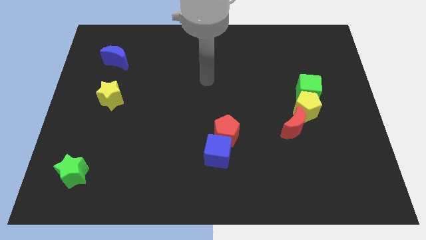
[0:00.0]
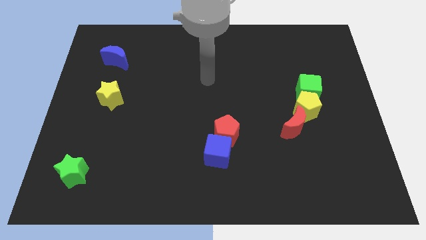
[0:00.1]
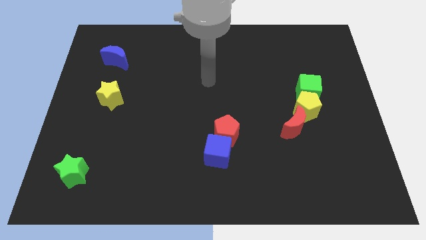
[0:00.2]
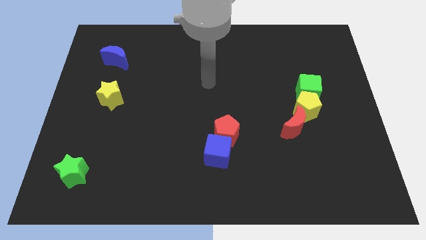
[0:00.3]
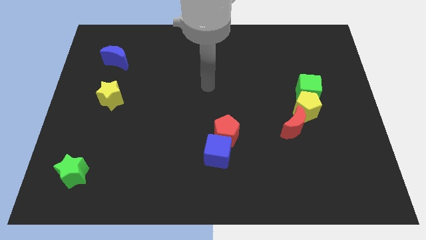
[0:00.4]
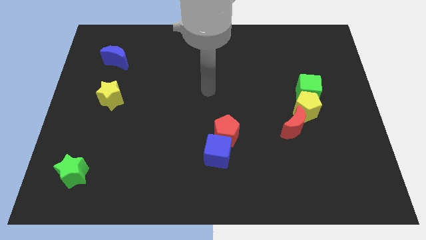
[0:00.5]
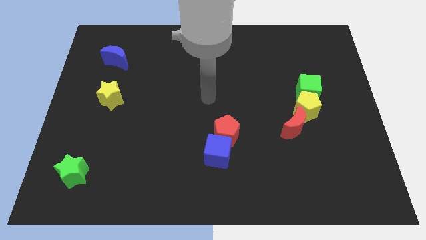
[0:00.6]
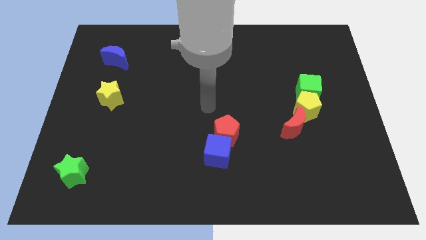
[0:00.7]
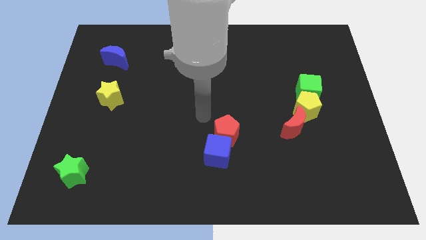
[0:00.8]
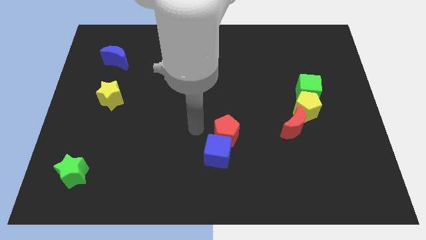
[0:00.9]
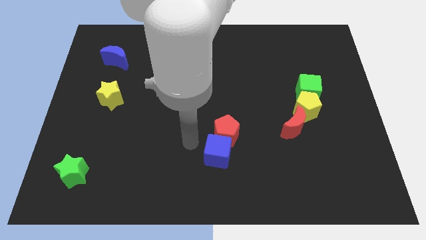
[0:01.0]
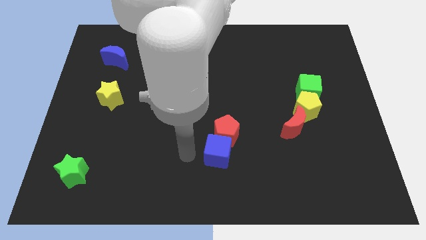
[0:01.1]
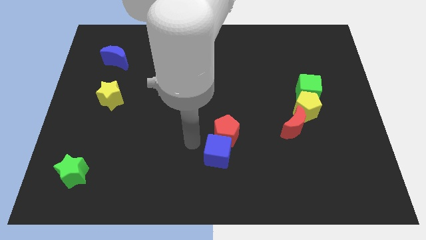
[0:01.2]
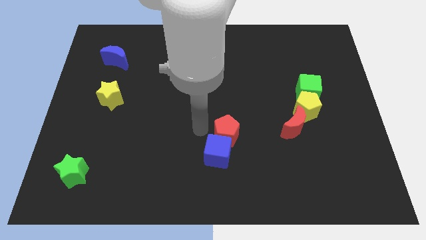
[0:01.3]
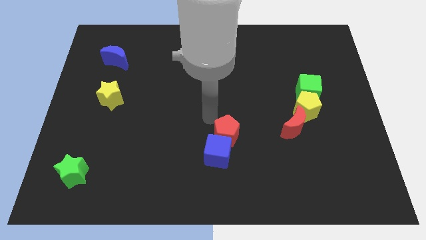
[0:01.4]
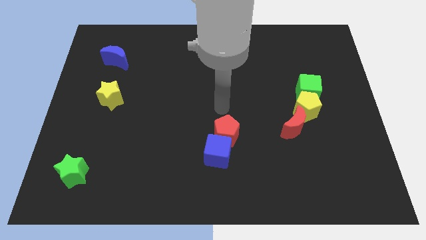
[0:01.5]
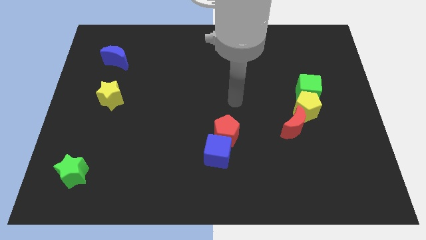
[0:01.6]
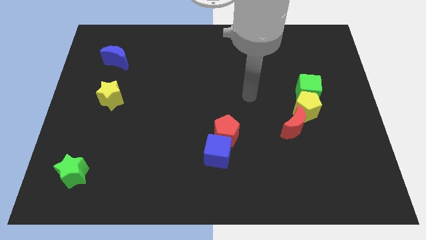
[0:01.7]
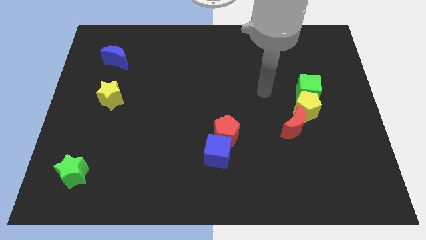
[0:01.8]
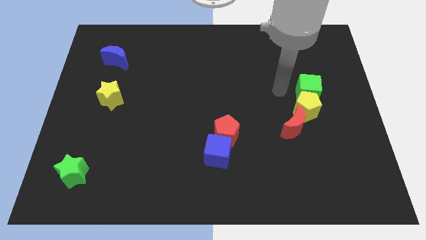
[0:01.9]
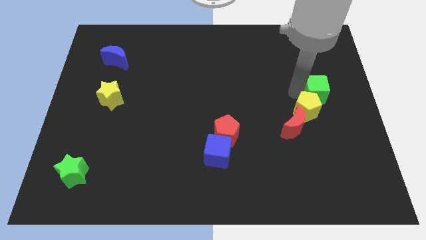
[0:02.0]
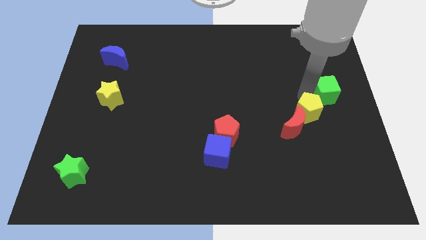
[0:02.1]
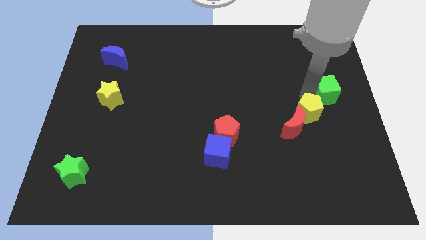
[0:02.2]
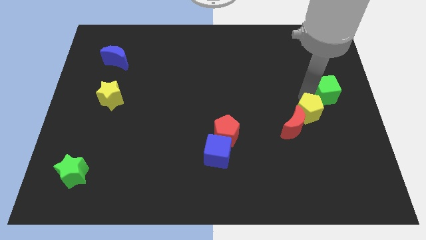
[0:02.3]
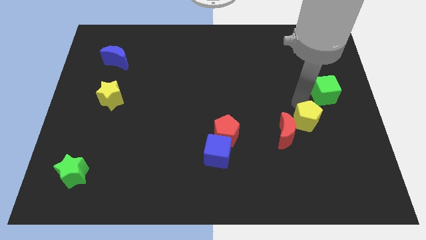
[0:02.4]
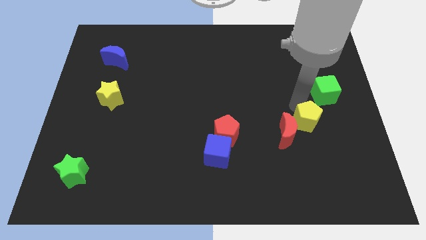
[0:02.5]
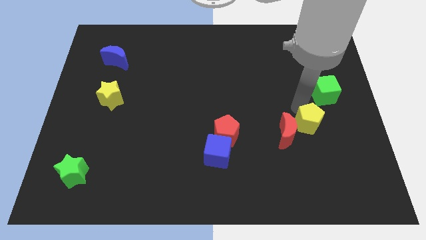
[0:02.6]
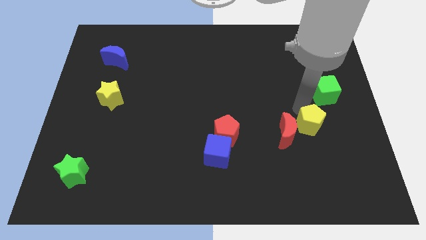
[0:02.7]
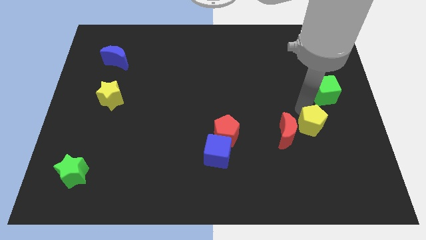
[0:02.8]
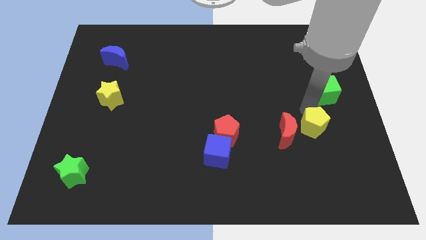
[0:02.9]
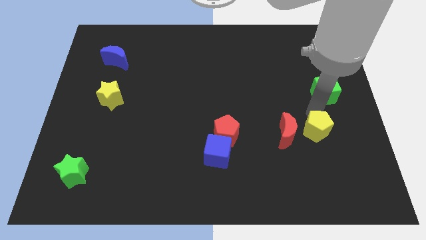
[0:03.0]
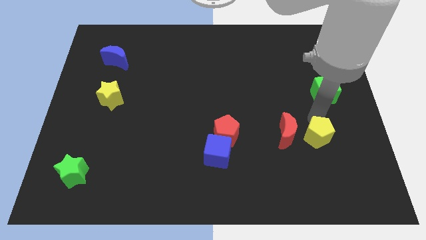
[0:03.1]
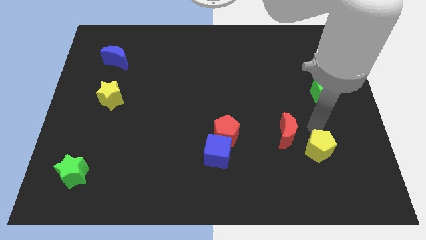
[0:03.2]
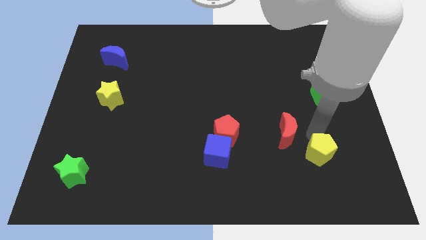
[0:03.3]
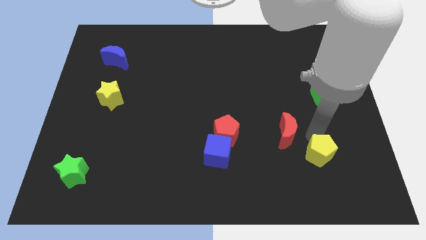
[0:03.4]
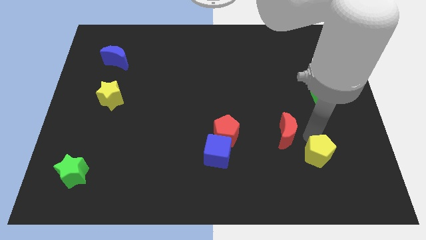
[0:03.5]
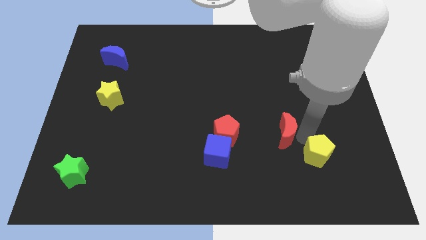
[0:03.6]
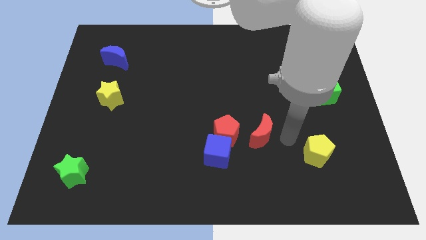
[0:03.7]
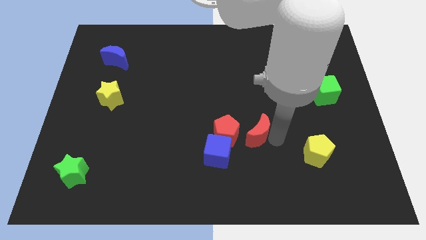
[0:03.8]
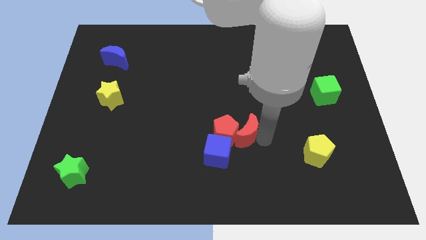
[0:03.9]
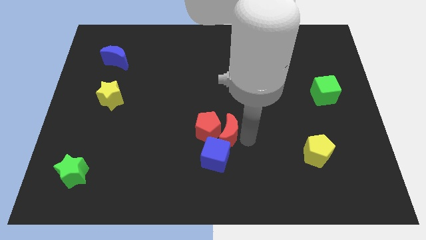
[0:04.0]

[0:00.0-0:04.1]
separate the yellow pentagon from the green square

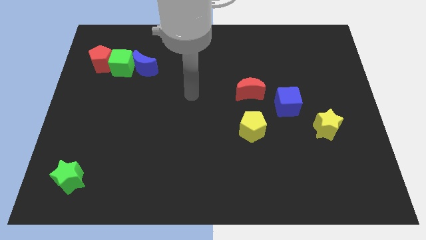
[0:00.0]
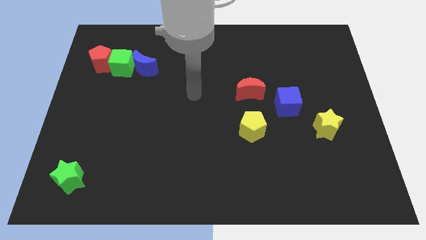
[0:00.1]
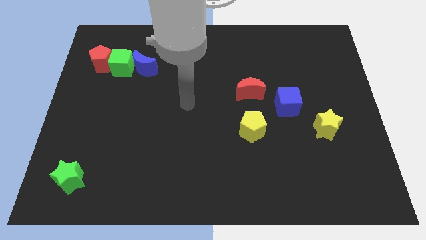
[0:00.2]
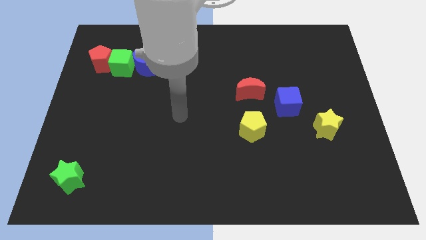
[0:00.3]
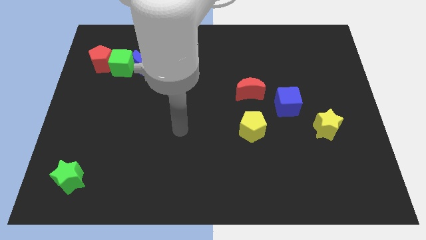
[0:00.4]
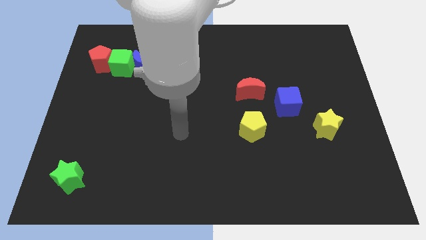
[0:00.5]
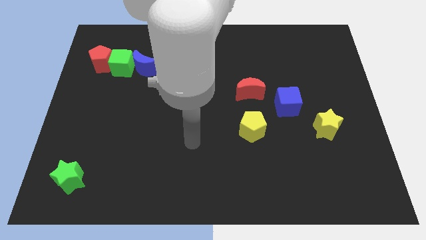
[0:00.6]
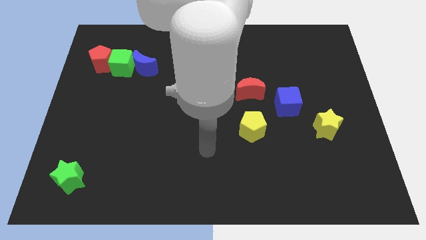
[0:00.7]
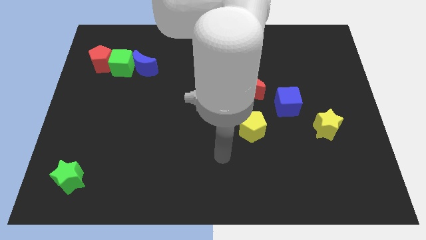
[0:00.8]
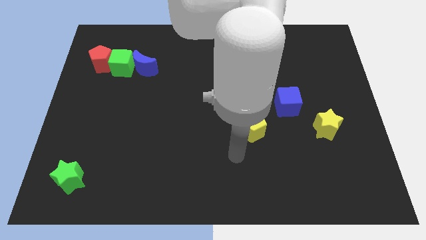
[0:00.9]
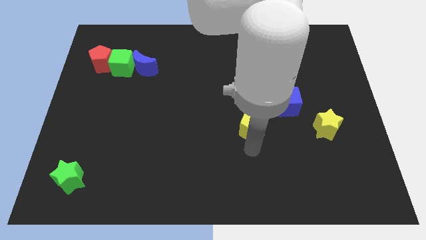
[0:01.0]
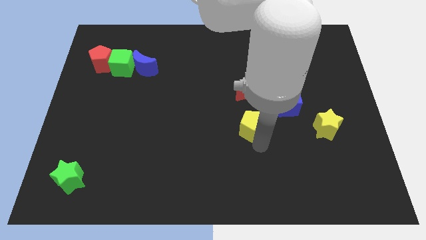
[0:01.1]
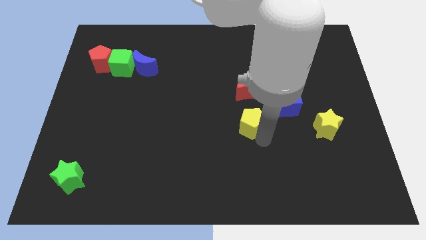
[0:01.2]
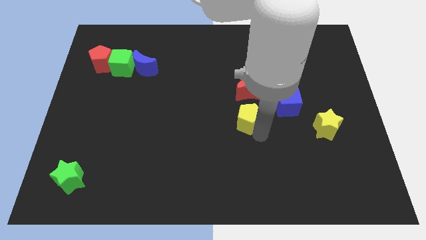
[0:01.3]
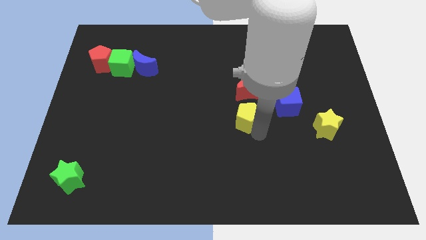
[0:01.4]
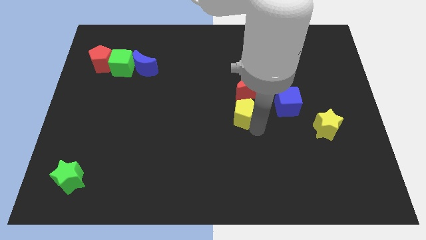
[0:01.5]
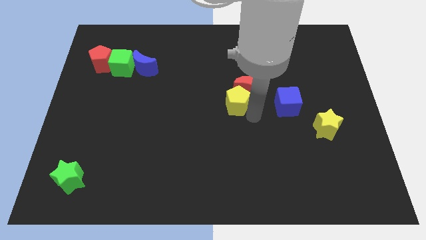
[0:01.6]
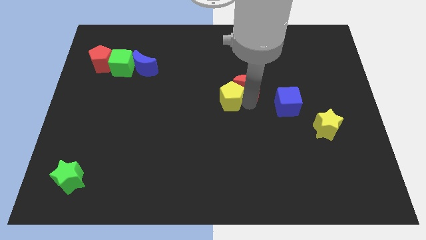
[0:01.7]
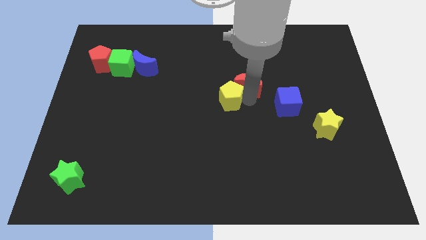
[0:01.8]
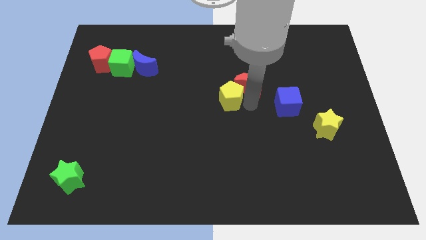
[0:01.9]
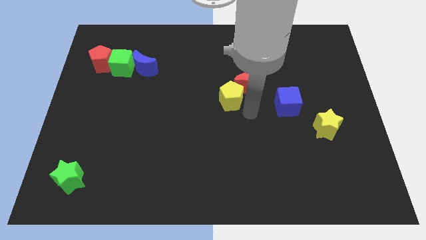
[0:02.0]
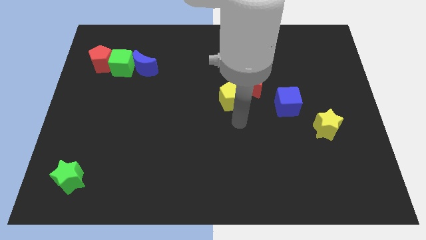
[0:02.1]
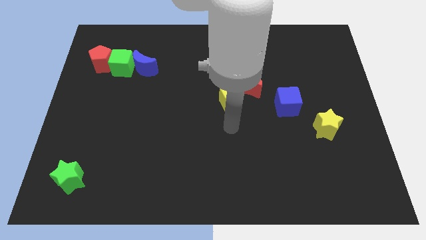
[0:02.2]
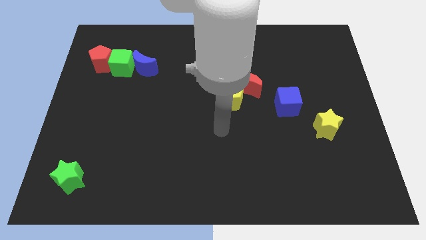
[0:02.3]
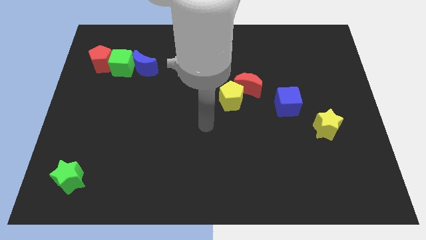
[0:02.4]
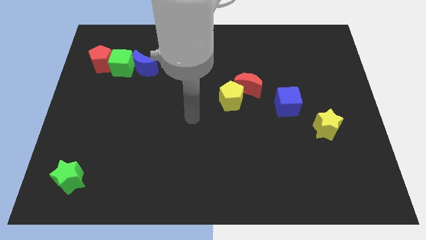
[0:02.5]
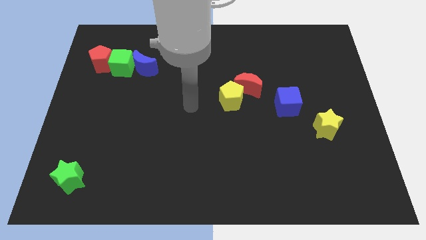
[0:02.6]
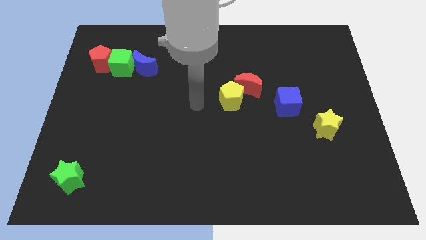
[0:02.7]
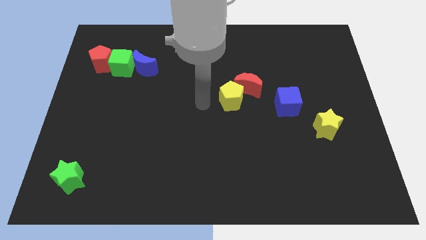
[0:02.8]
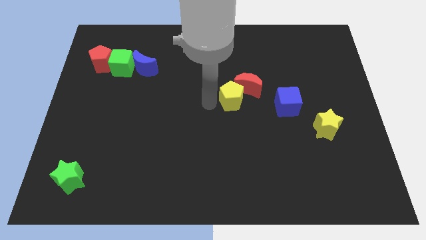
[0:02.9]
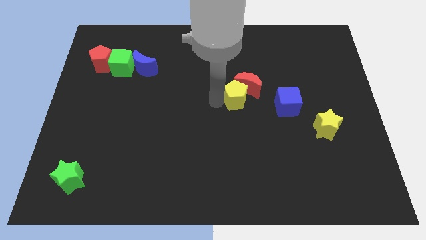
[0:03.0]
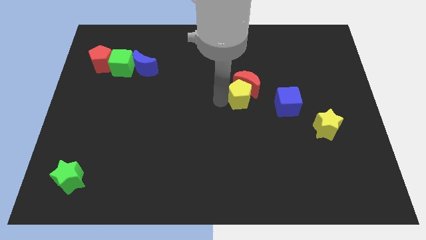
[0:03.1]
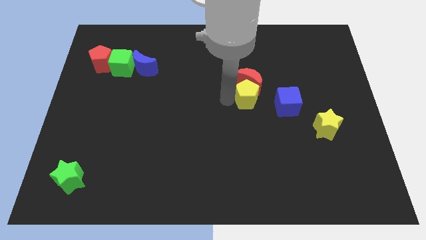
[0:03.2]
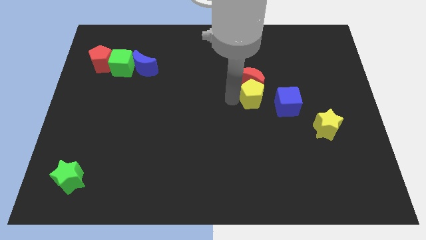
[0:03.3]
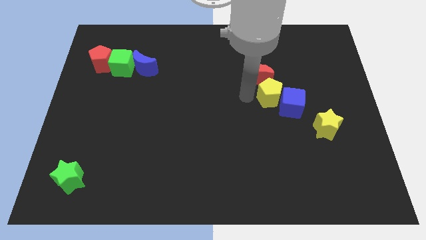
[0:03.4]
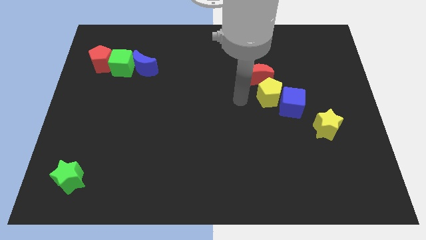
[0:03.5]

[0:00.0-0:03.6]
push the yellow pentagon into the red moon

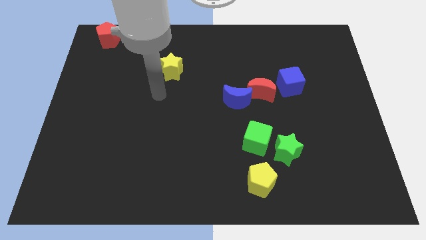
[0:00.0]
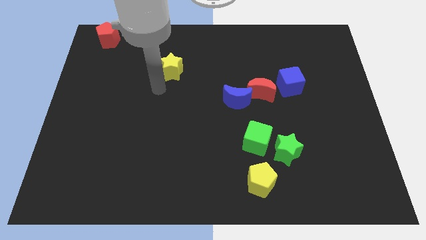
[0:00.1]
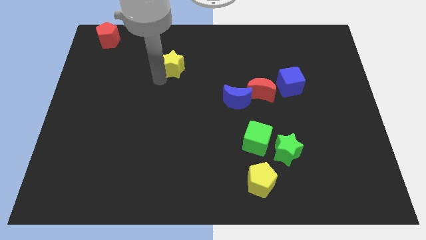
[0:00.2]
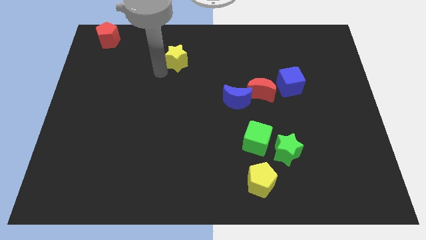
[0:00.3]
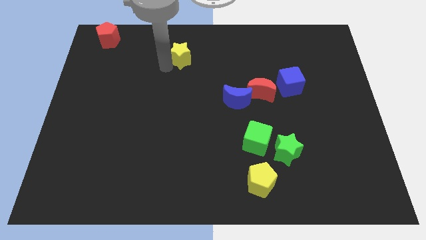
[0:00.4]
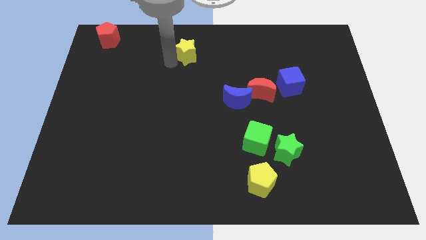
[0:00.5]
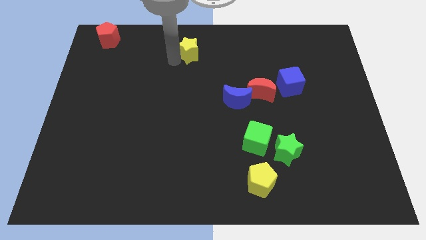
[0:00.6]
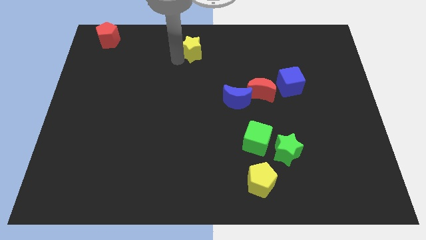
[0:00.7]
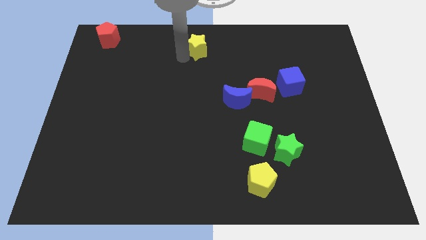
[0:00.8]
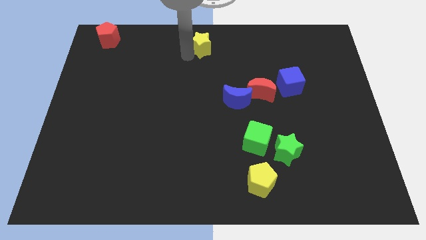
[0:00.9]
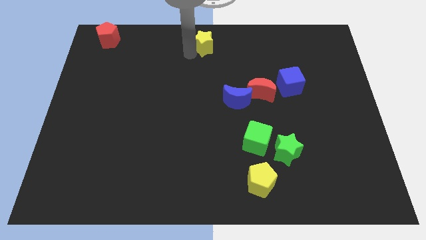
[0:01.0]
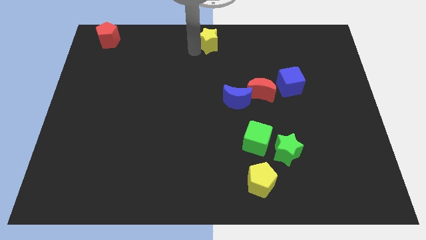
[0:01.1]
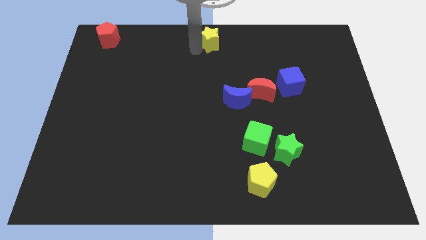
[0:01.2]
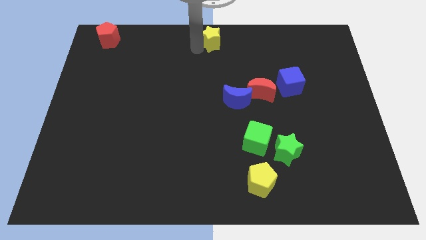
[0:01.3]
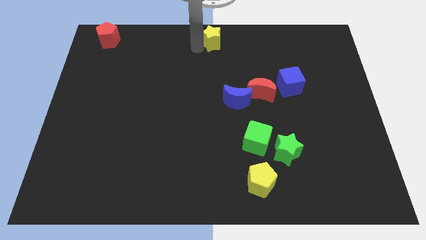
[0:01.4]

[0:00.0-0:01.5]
push the yellow star to the top center of the board
